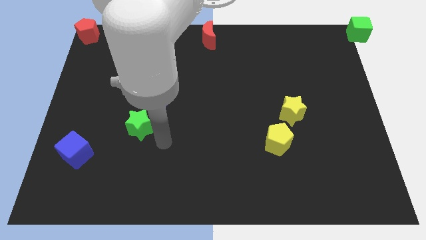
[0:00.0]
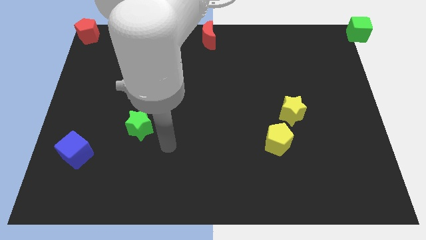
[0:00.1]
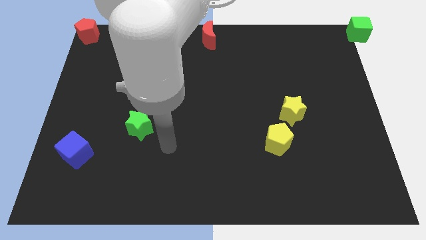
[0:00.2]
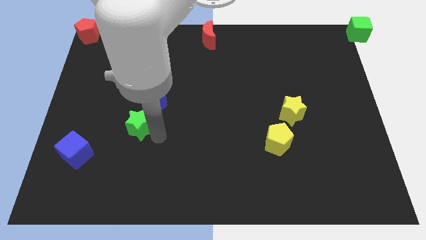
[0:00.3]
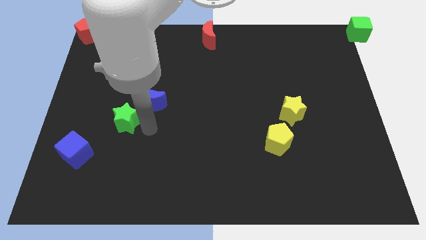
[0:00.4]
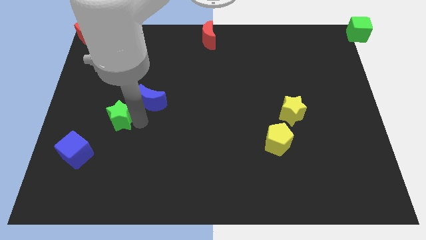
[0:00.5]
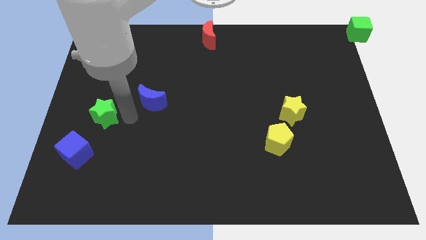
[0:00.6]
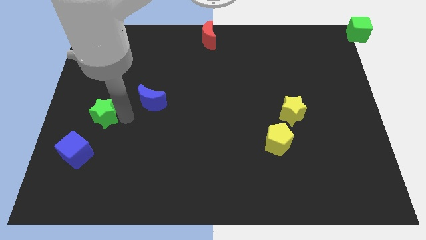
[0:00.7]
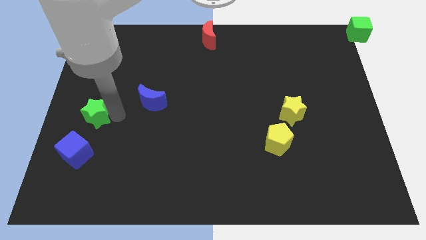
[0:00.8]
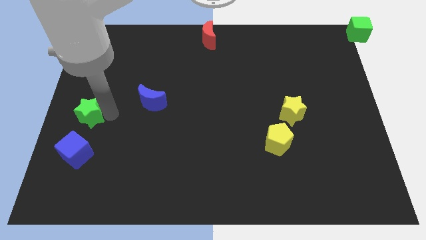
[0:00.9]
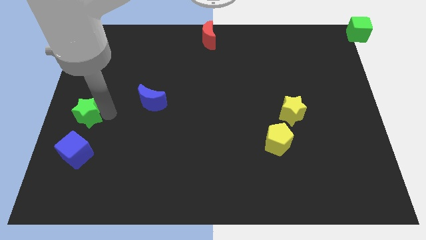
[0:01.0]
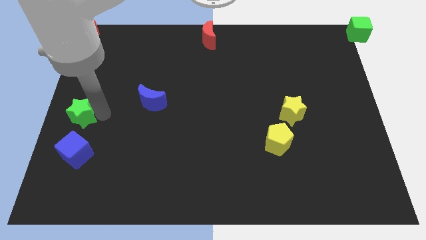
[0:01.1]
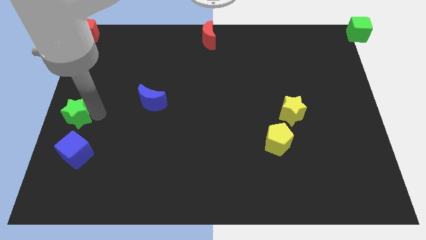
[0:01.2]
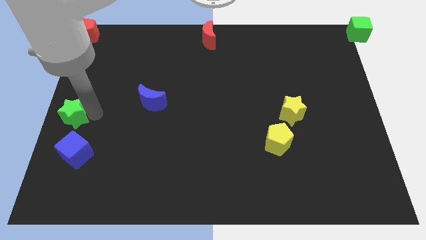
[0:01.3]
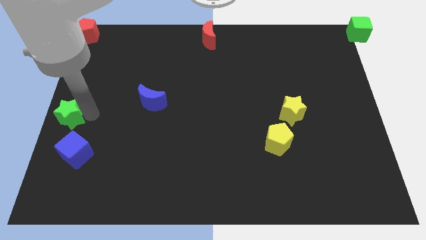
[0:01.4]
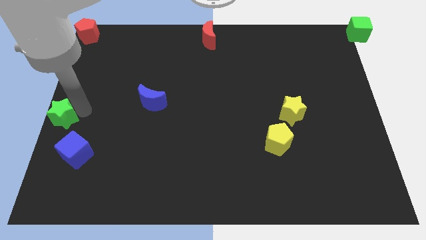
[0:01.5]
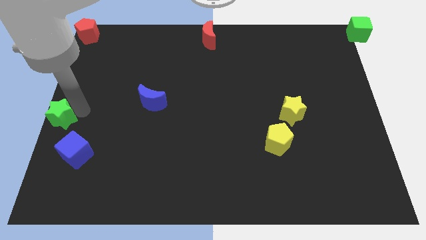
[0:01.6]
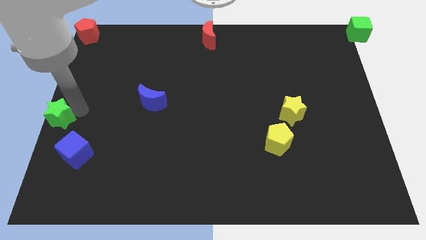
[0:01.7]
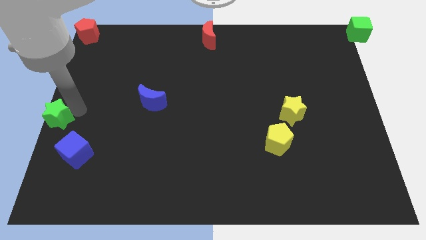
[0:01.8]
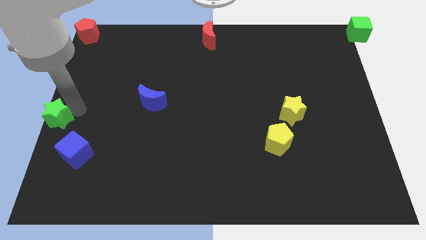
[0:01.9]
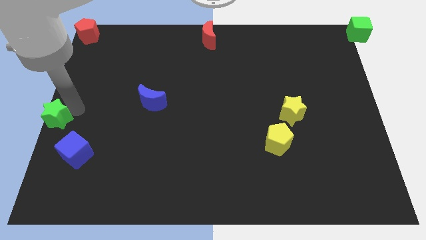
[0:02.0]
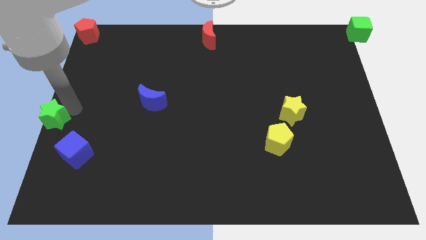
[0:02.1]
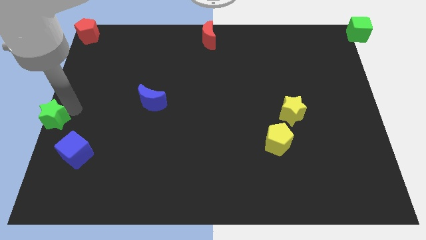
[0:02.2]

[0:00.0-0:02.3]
put the green star at the center left of the board

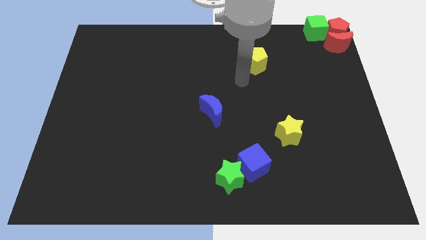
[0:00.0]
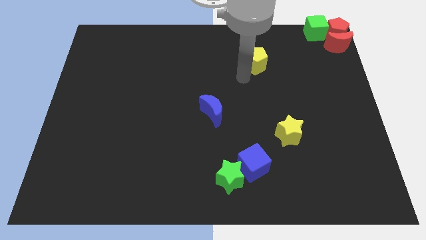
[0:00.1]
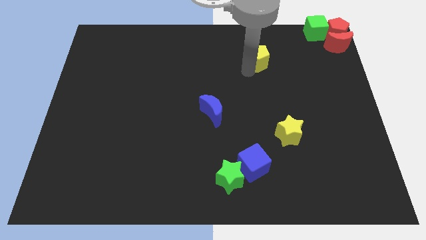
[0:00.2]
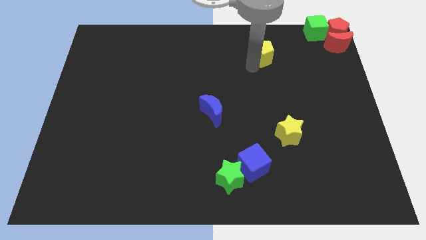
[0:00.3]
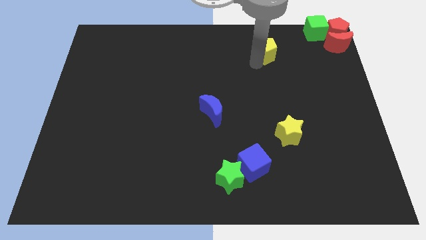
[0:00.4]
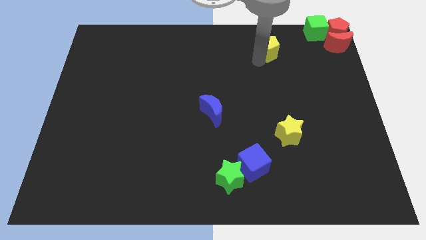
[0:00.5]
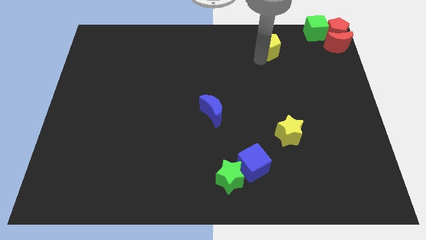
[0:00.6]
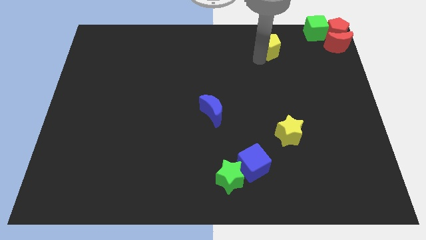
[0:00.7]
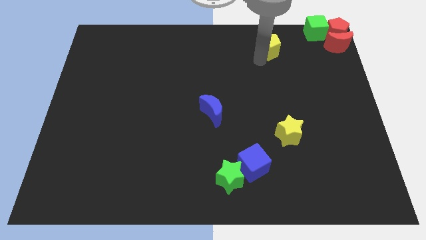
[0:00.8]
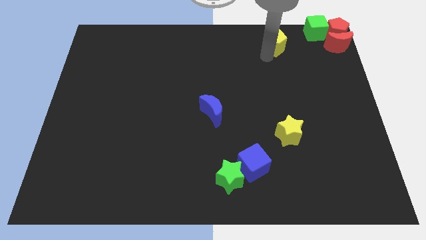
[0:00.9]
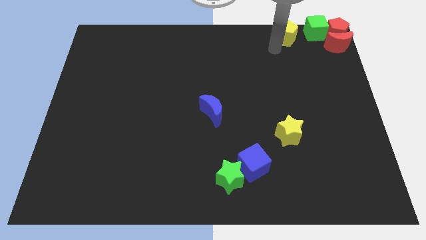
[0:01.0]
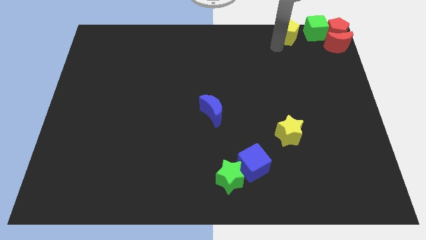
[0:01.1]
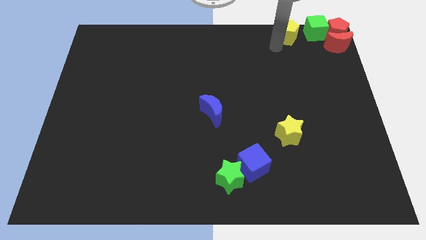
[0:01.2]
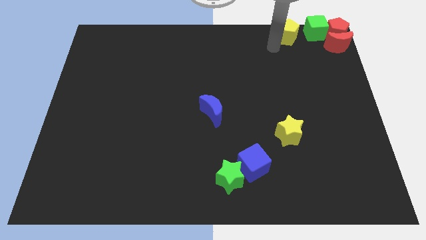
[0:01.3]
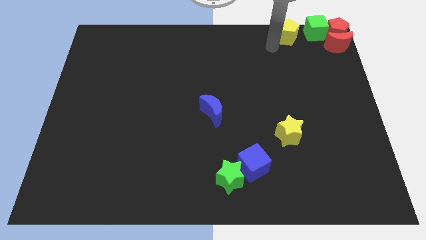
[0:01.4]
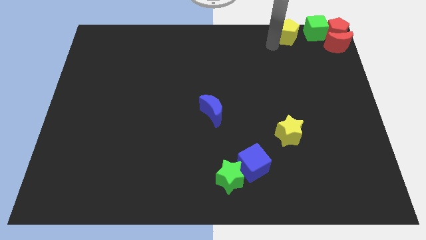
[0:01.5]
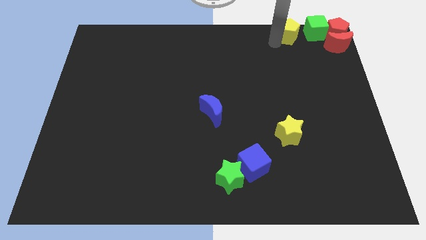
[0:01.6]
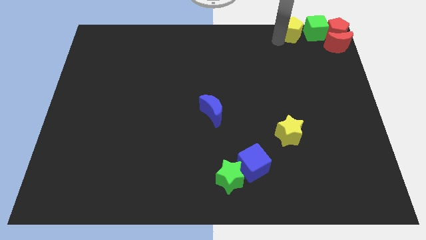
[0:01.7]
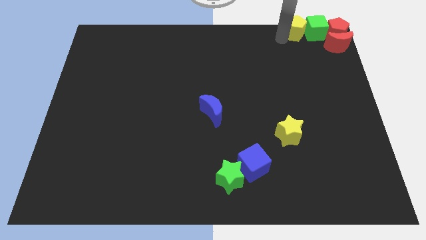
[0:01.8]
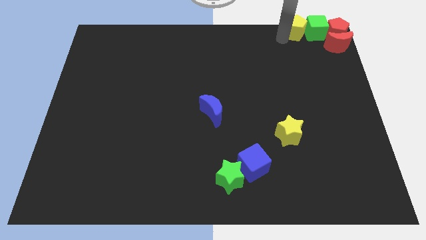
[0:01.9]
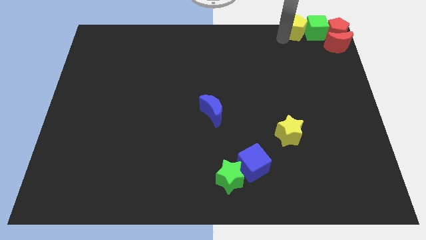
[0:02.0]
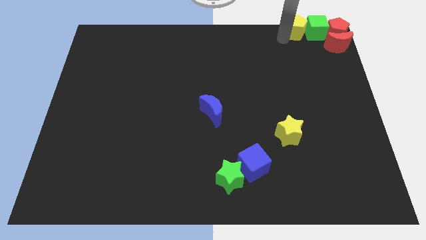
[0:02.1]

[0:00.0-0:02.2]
move the yellow pentagon left to the green cube

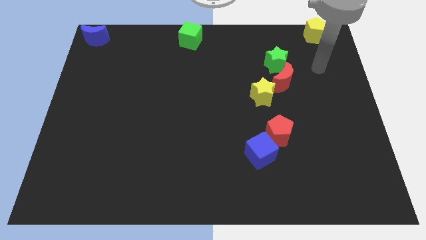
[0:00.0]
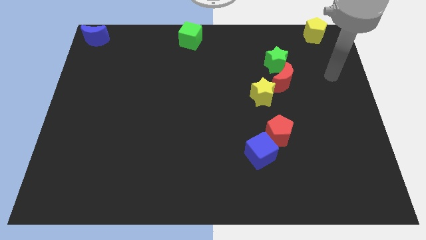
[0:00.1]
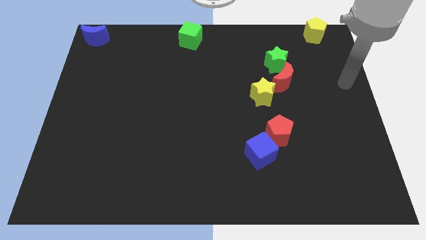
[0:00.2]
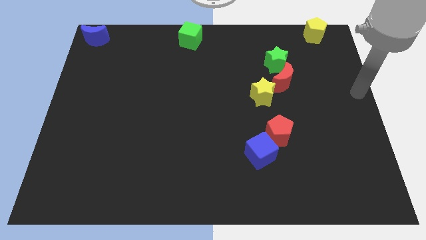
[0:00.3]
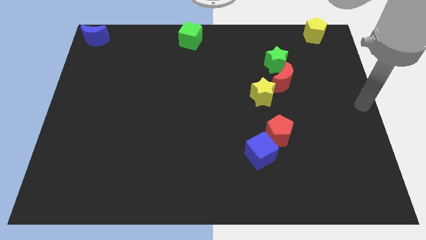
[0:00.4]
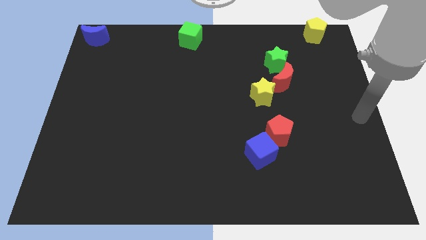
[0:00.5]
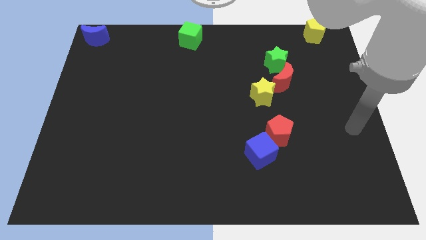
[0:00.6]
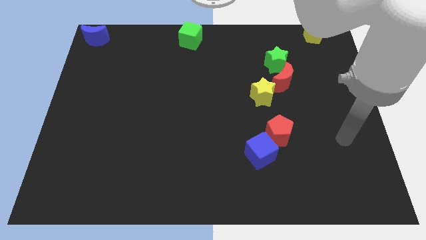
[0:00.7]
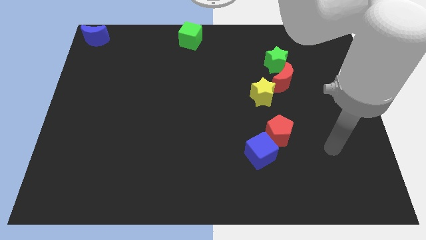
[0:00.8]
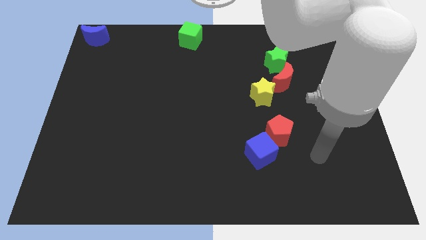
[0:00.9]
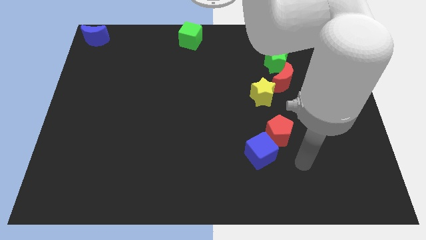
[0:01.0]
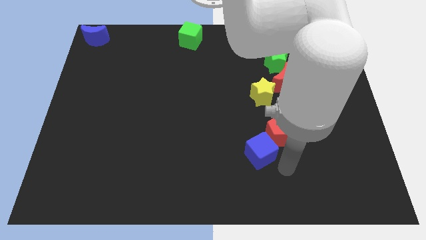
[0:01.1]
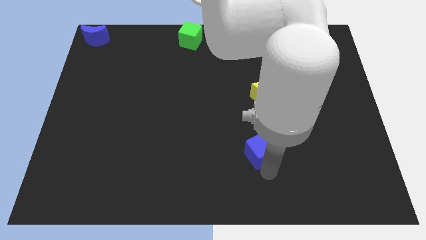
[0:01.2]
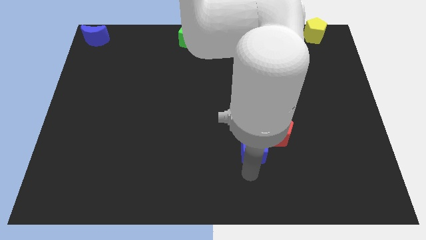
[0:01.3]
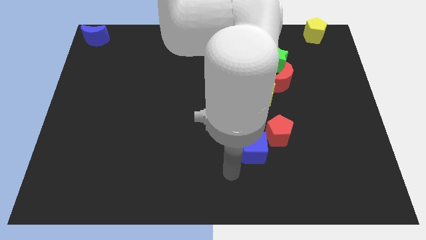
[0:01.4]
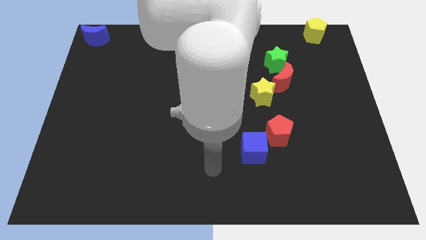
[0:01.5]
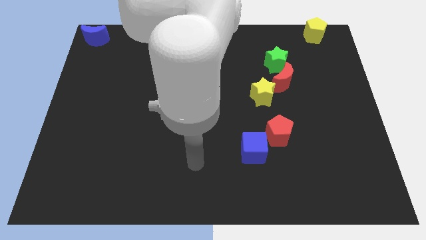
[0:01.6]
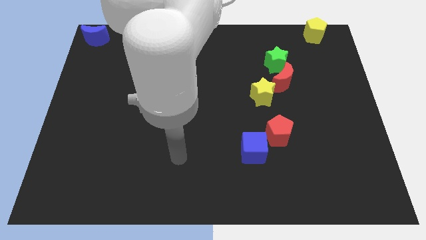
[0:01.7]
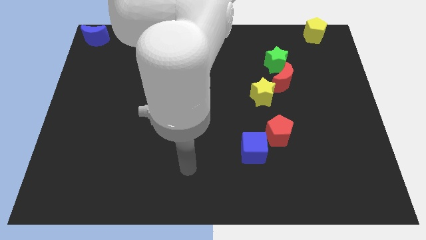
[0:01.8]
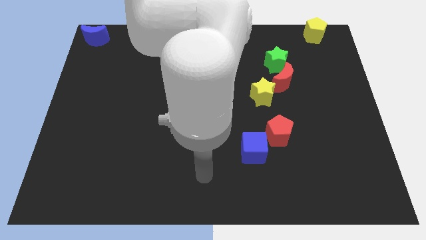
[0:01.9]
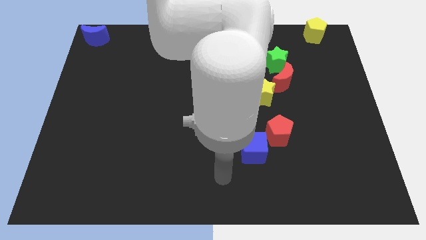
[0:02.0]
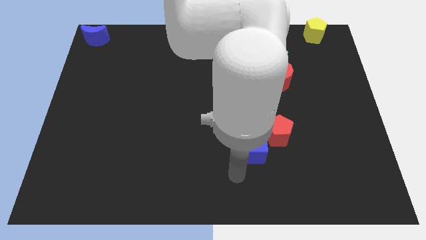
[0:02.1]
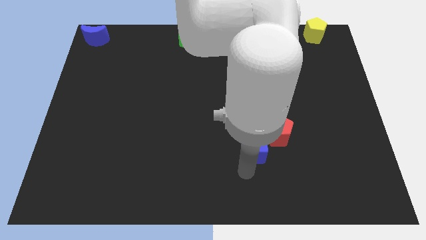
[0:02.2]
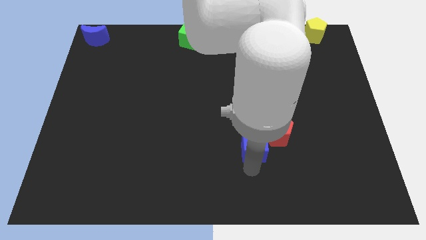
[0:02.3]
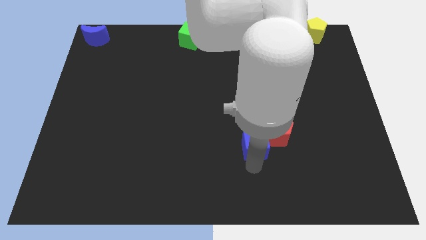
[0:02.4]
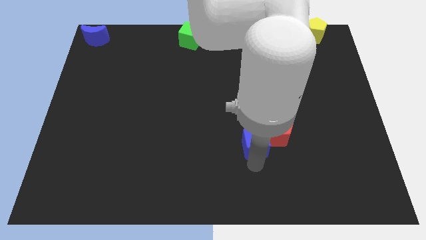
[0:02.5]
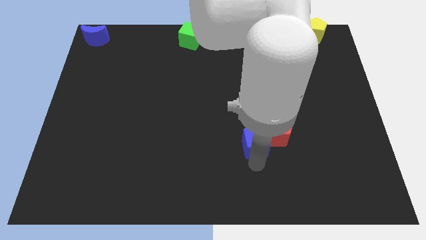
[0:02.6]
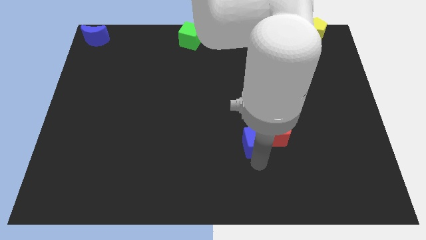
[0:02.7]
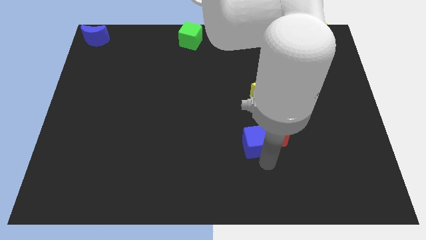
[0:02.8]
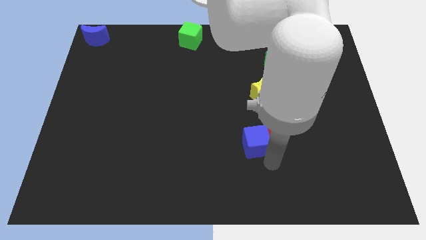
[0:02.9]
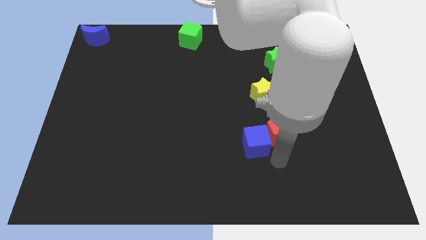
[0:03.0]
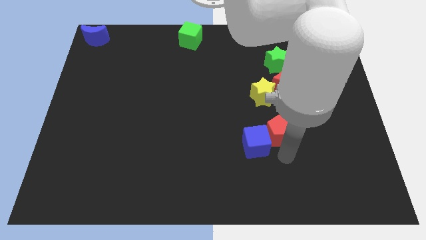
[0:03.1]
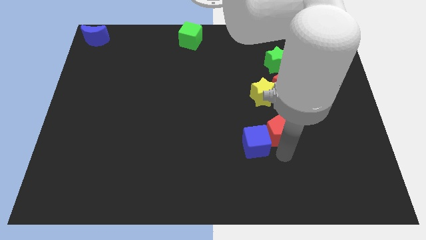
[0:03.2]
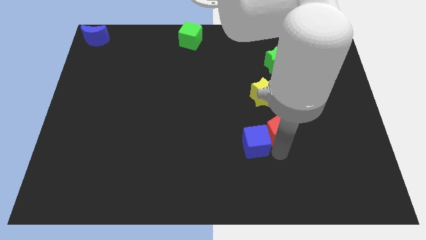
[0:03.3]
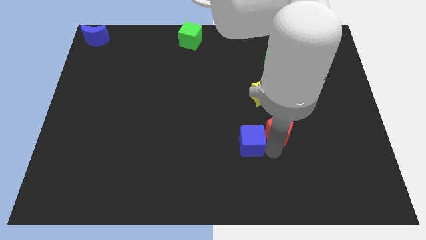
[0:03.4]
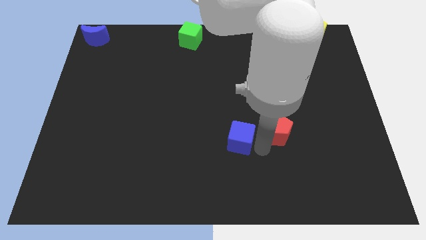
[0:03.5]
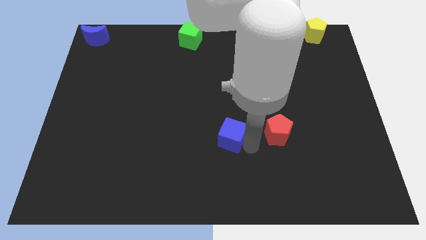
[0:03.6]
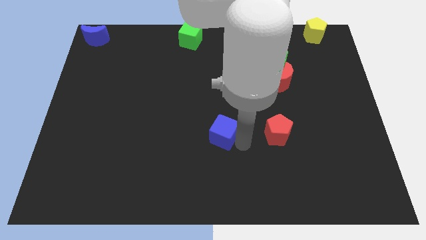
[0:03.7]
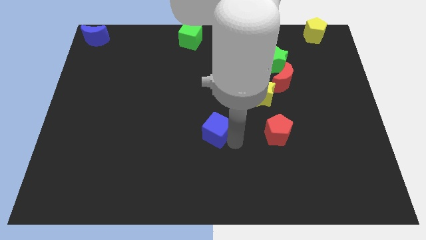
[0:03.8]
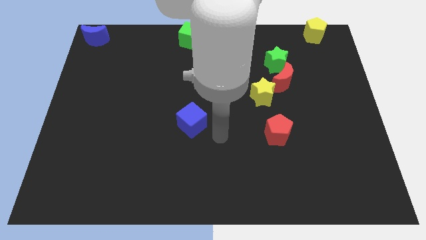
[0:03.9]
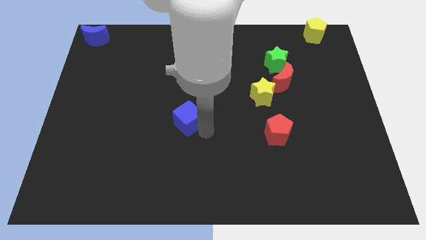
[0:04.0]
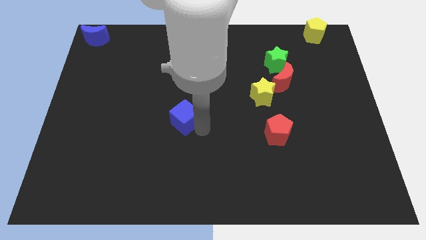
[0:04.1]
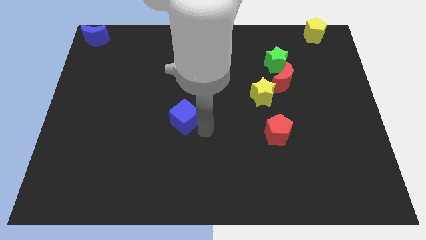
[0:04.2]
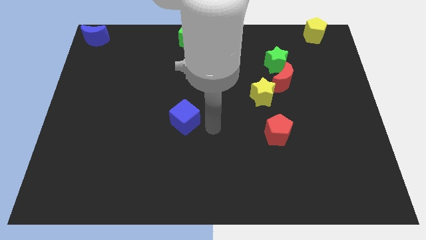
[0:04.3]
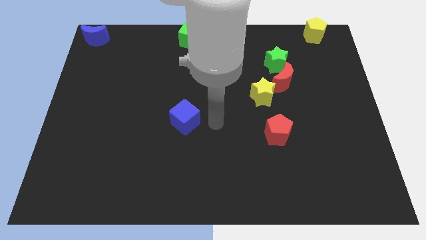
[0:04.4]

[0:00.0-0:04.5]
place the blue cube at the center of the board

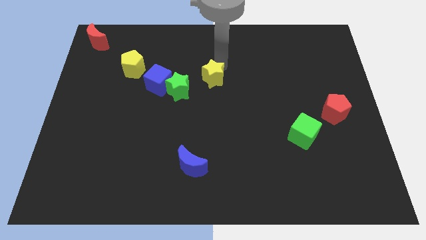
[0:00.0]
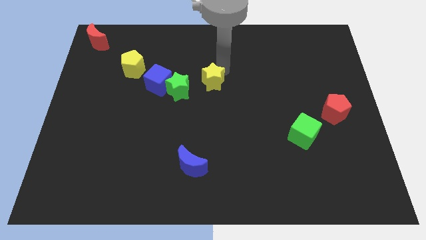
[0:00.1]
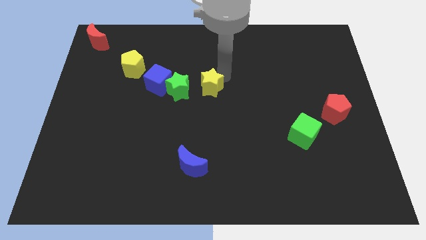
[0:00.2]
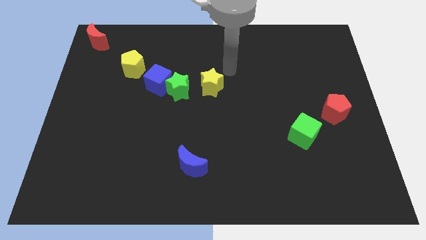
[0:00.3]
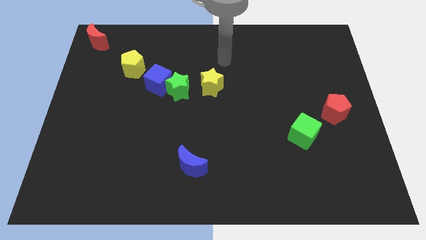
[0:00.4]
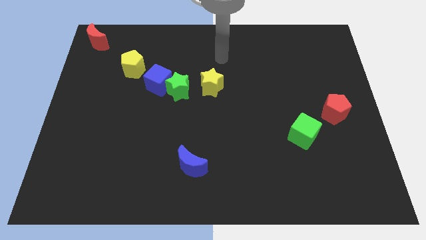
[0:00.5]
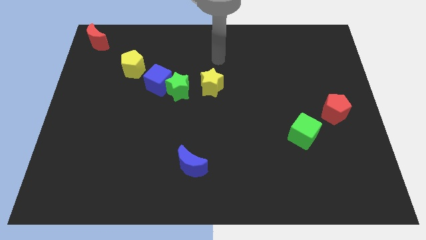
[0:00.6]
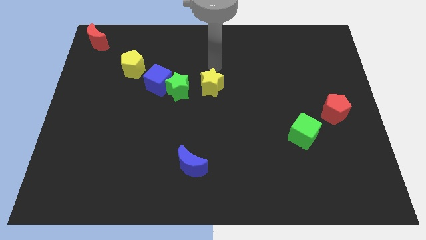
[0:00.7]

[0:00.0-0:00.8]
move the yellow star right beside the green star
